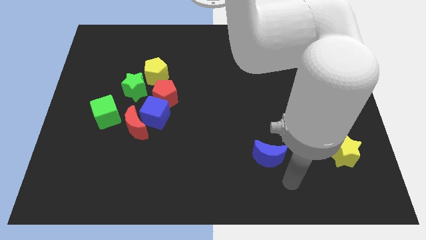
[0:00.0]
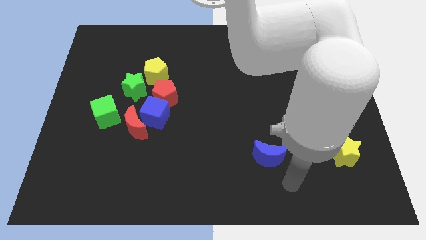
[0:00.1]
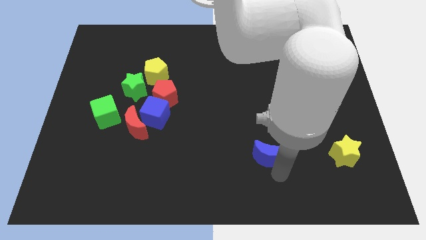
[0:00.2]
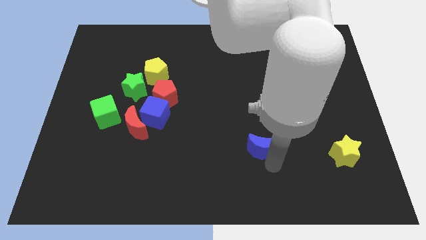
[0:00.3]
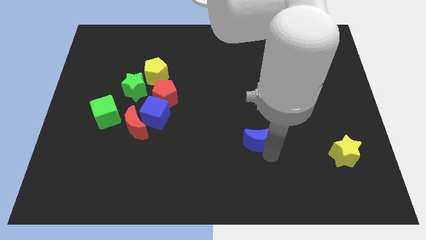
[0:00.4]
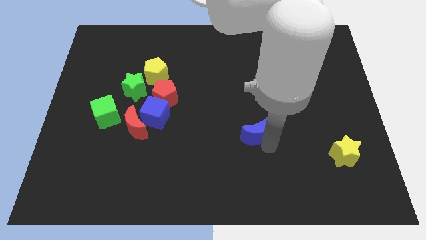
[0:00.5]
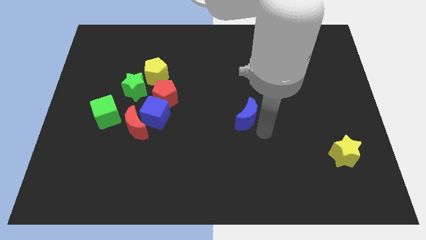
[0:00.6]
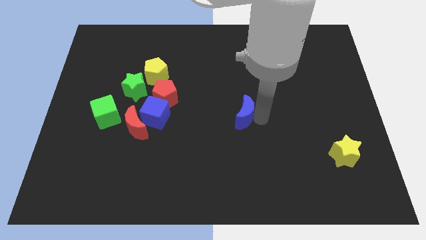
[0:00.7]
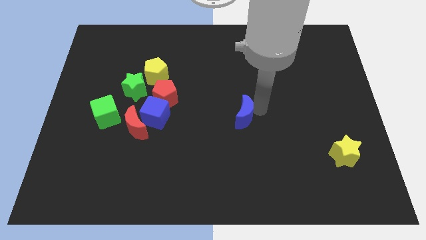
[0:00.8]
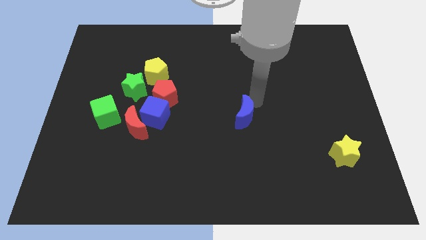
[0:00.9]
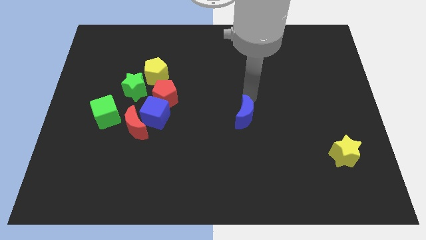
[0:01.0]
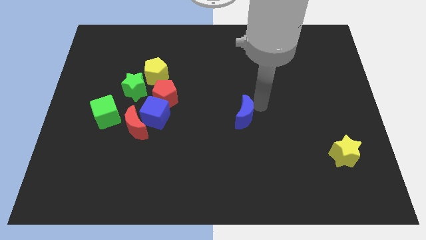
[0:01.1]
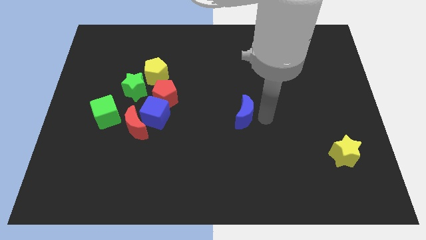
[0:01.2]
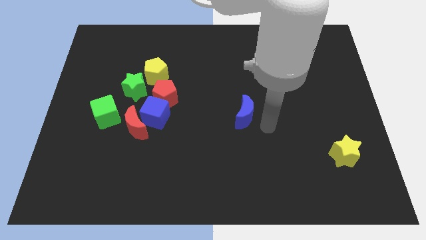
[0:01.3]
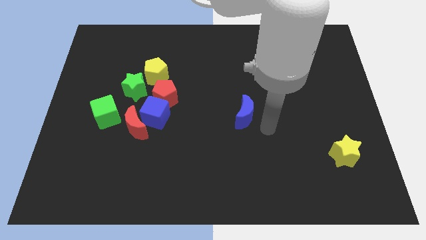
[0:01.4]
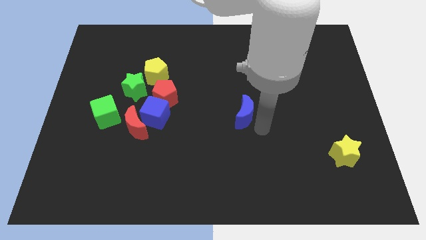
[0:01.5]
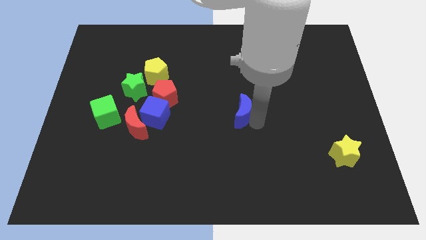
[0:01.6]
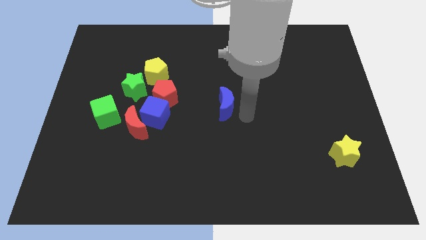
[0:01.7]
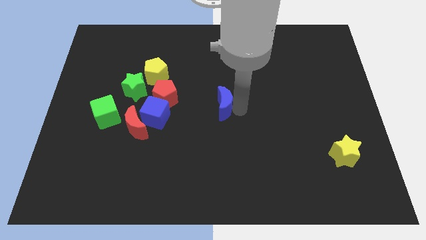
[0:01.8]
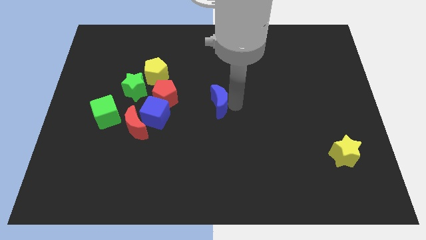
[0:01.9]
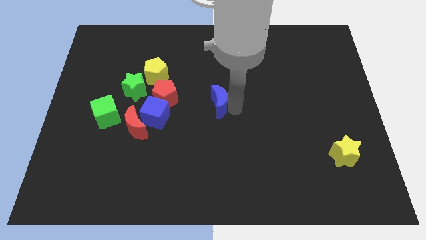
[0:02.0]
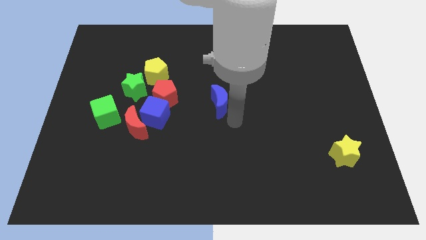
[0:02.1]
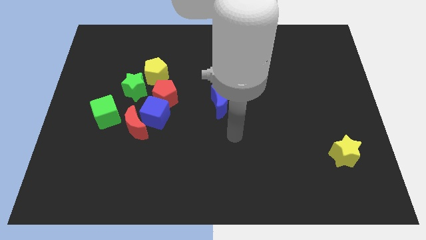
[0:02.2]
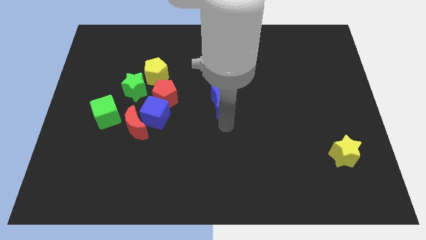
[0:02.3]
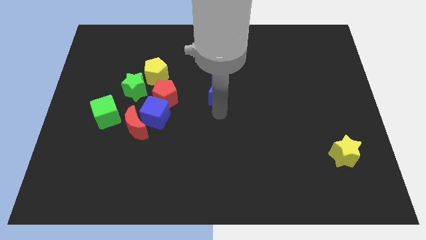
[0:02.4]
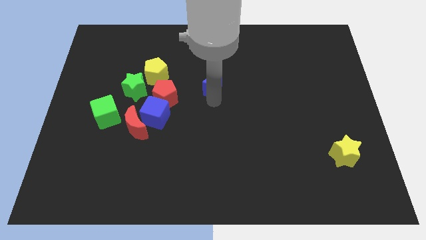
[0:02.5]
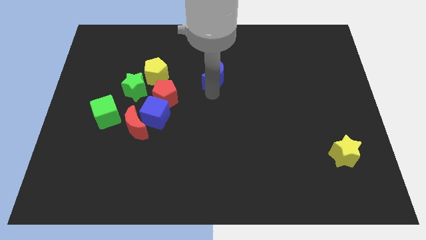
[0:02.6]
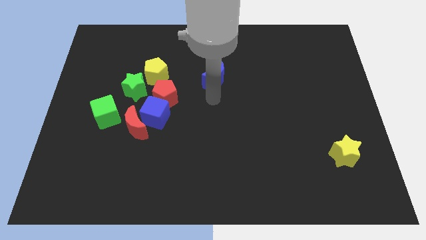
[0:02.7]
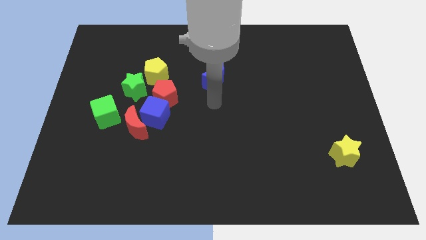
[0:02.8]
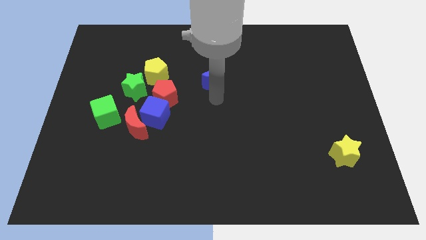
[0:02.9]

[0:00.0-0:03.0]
place blue moon to the right of yellow pentagon
